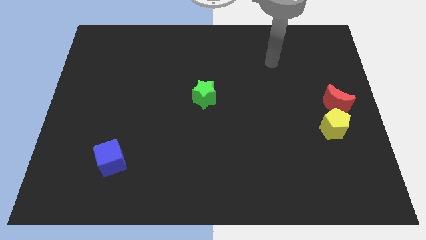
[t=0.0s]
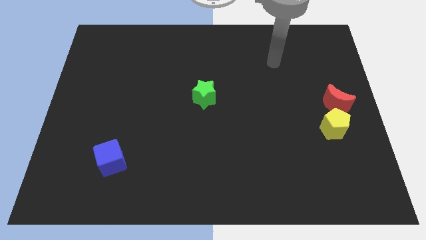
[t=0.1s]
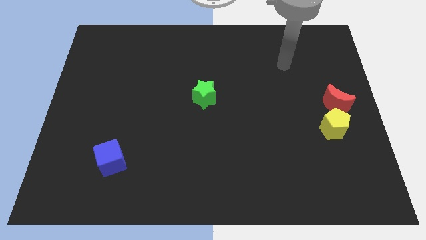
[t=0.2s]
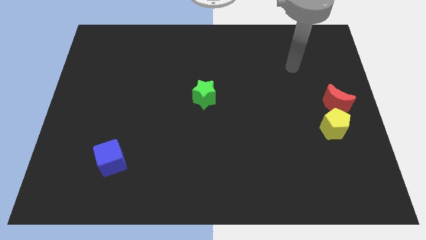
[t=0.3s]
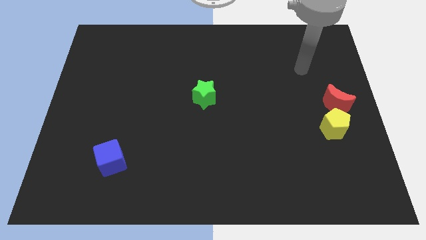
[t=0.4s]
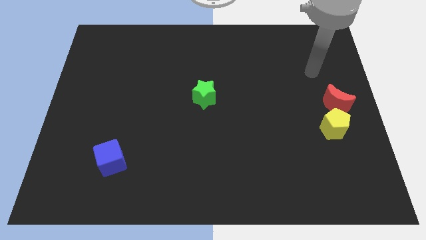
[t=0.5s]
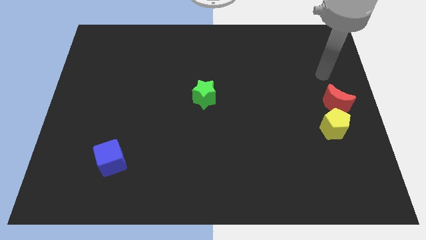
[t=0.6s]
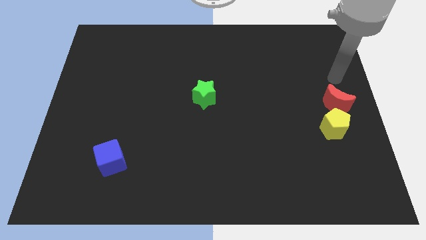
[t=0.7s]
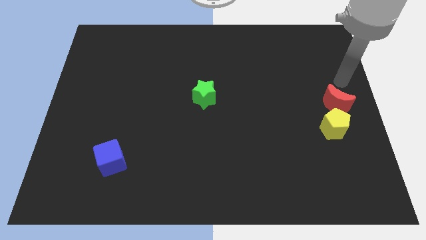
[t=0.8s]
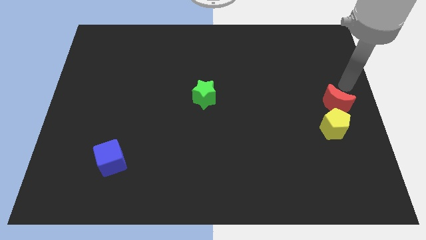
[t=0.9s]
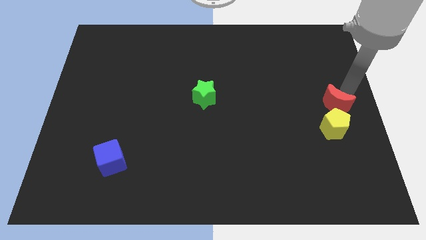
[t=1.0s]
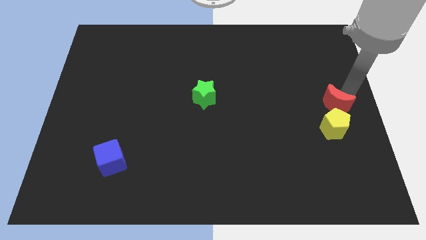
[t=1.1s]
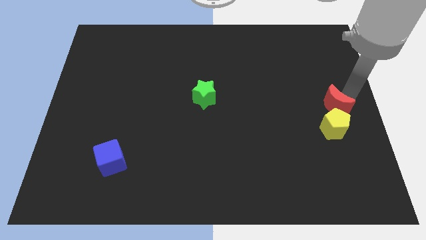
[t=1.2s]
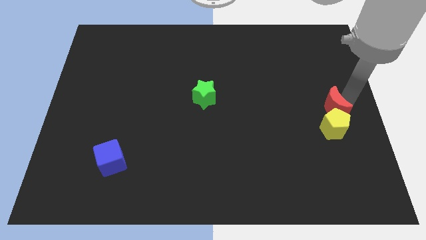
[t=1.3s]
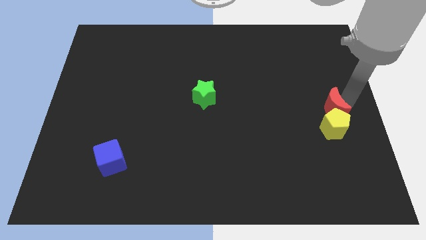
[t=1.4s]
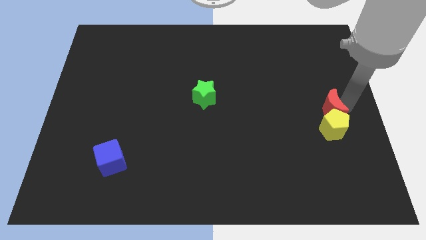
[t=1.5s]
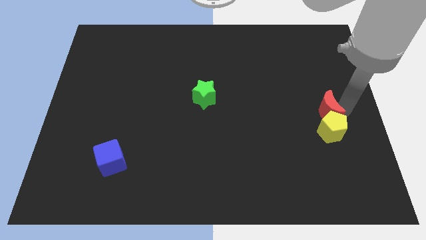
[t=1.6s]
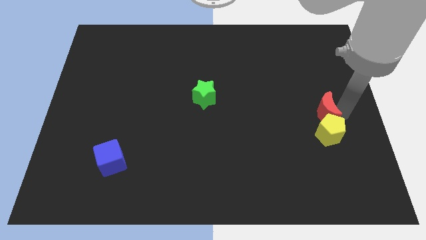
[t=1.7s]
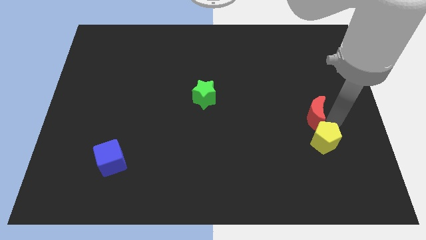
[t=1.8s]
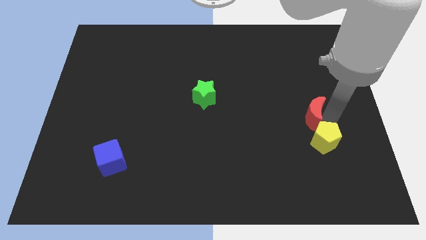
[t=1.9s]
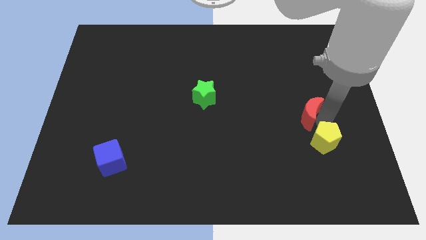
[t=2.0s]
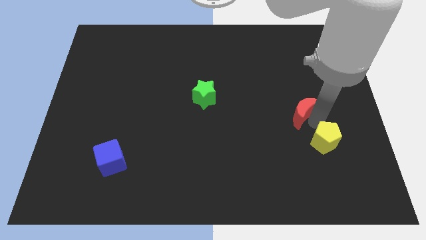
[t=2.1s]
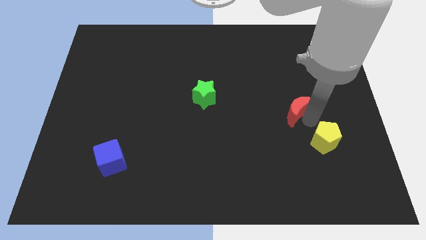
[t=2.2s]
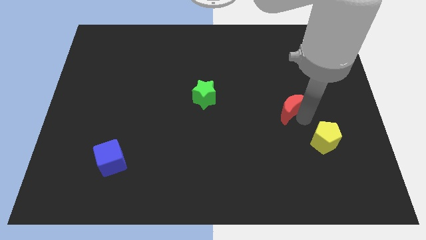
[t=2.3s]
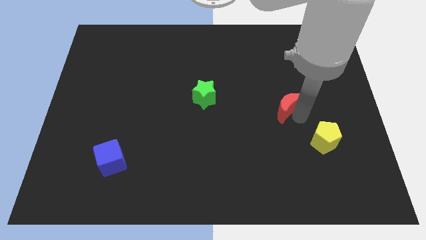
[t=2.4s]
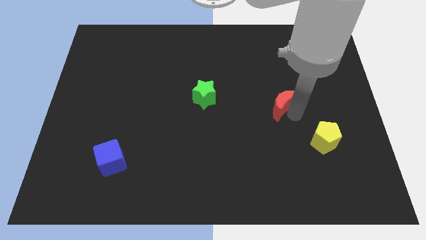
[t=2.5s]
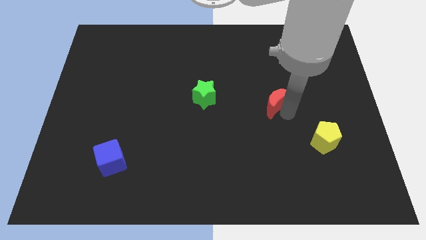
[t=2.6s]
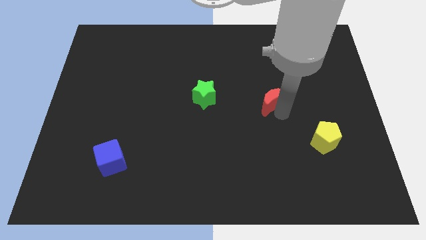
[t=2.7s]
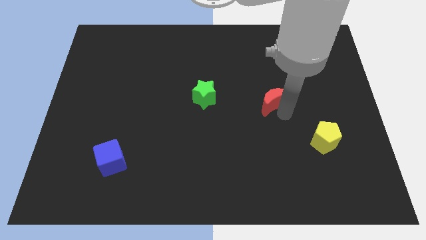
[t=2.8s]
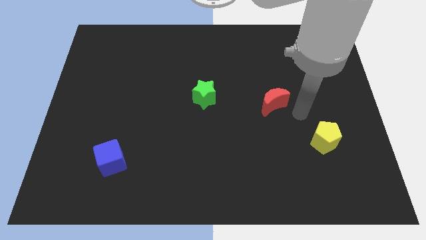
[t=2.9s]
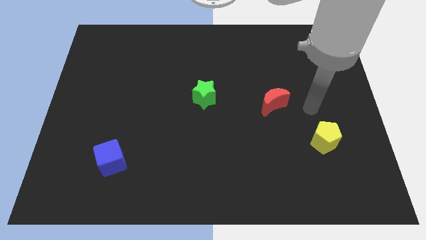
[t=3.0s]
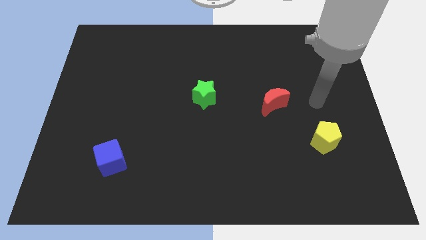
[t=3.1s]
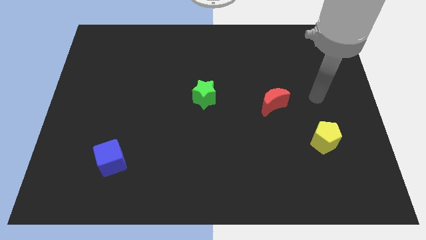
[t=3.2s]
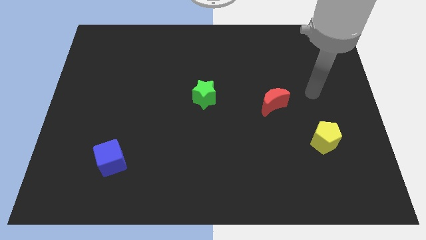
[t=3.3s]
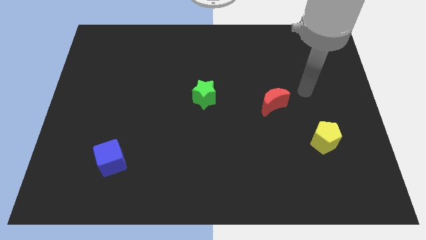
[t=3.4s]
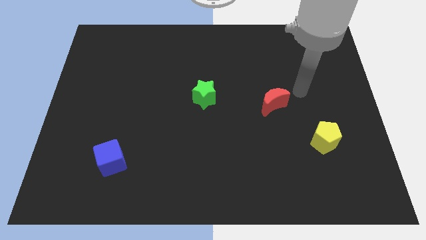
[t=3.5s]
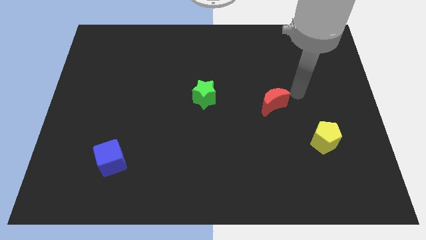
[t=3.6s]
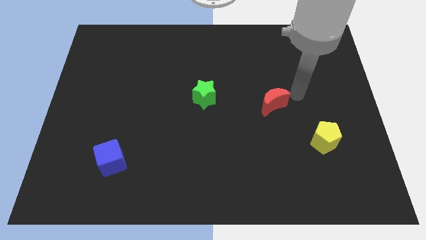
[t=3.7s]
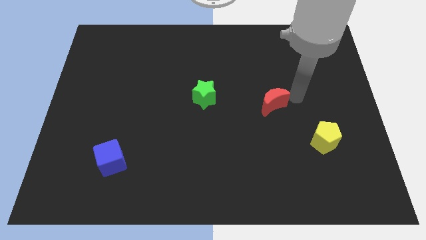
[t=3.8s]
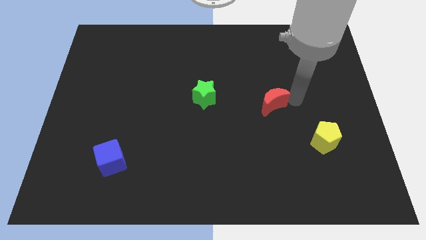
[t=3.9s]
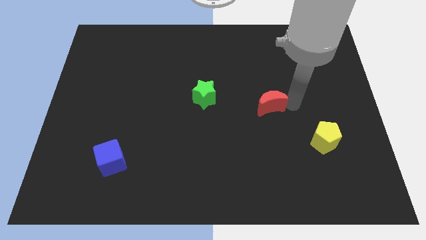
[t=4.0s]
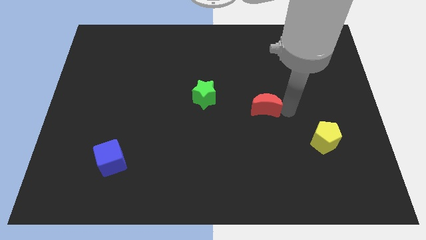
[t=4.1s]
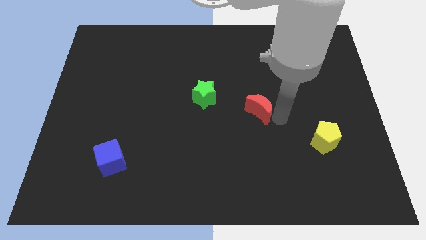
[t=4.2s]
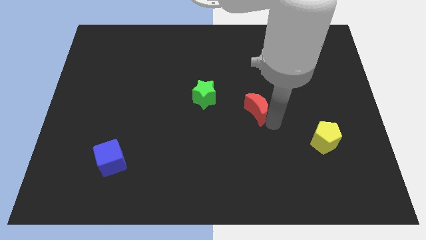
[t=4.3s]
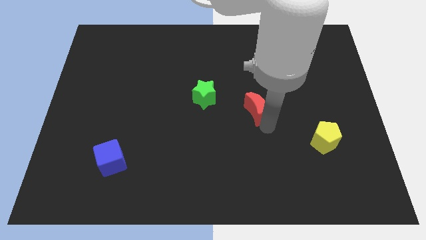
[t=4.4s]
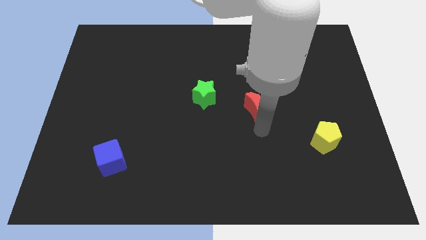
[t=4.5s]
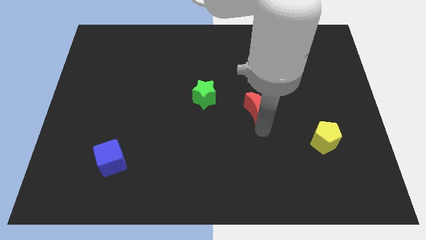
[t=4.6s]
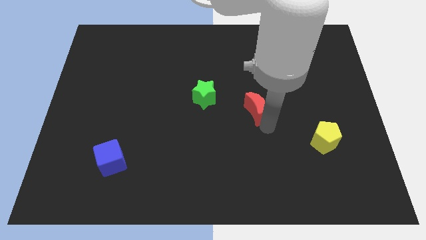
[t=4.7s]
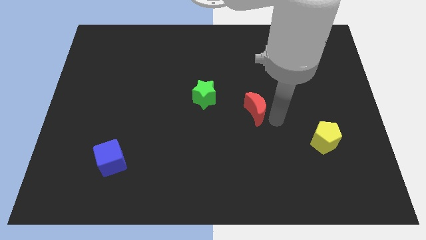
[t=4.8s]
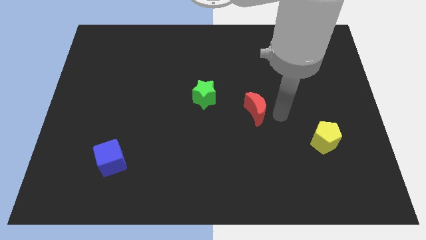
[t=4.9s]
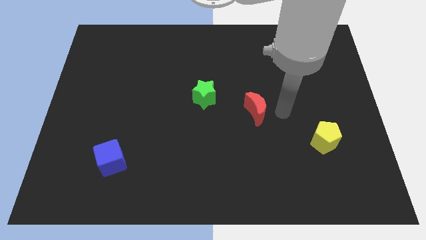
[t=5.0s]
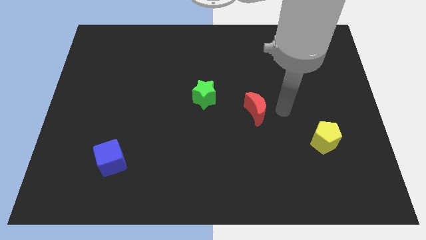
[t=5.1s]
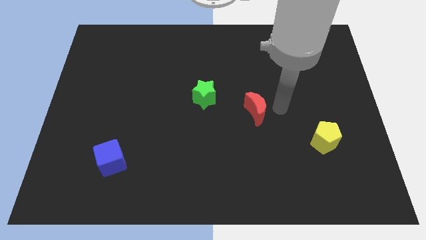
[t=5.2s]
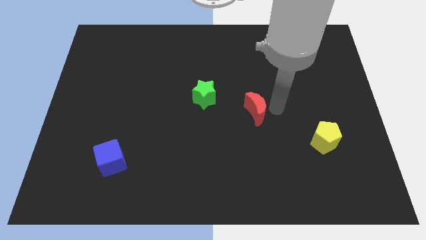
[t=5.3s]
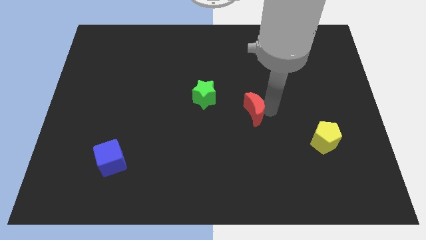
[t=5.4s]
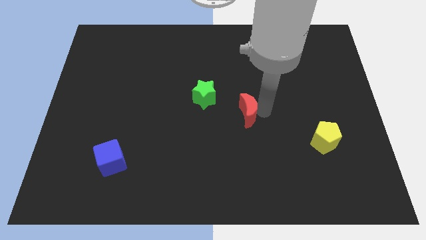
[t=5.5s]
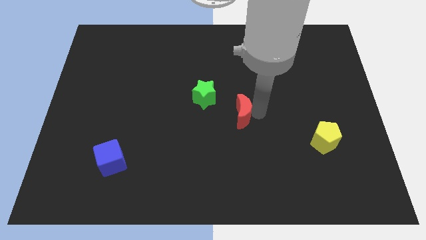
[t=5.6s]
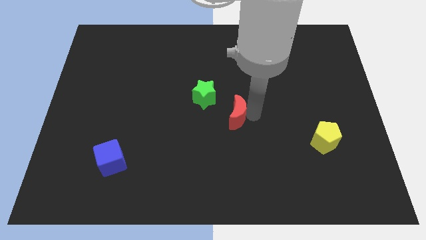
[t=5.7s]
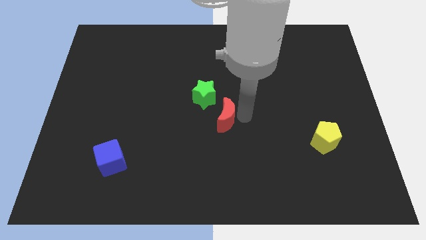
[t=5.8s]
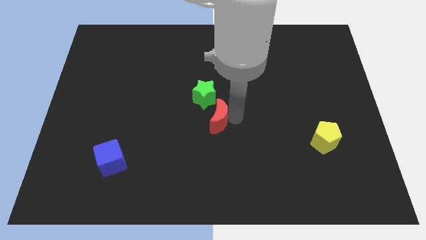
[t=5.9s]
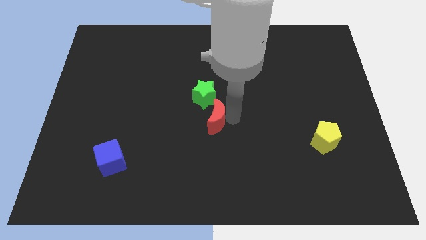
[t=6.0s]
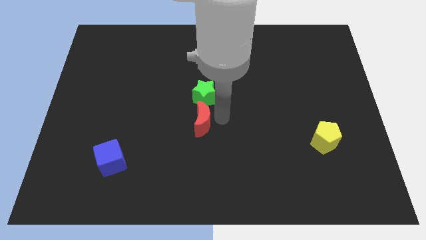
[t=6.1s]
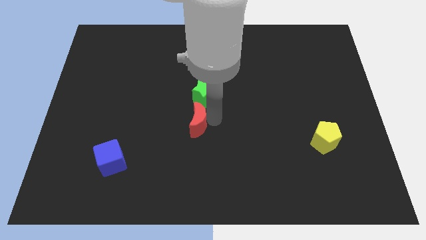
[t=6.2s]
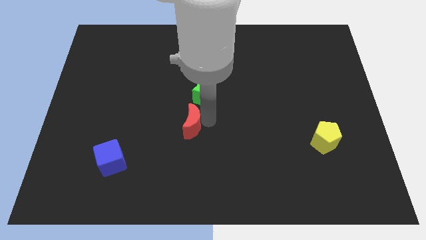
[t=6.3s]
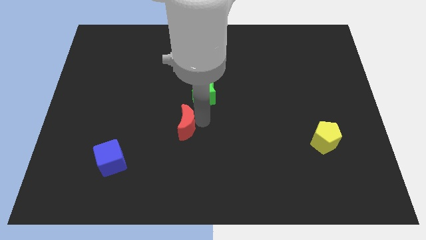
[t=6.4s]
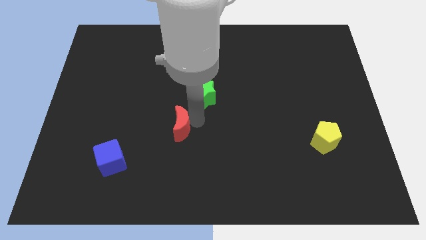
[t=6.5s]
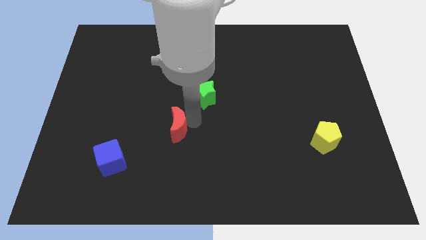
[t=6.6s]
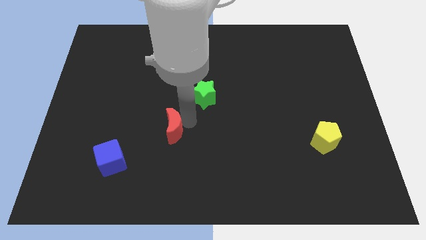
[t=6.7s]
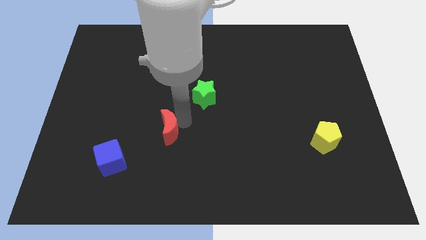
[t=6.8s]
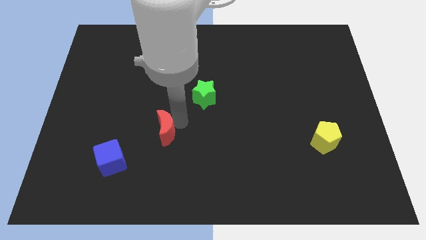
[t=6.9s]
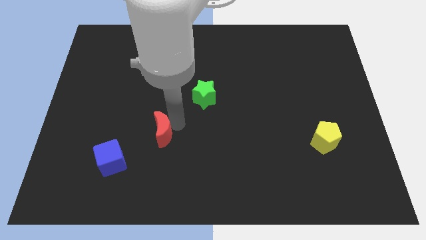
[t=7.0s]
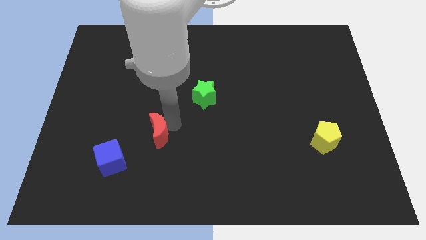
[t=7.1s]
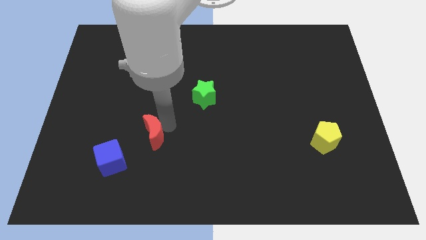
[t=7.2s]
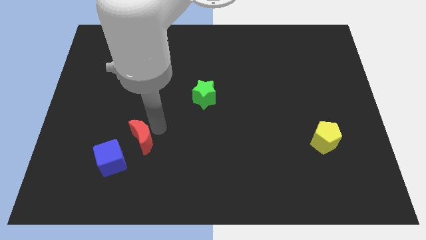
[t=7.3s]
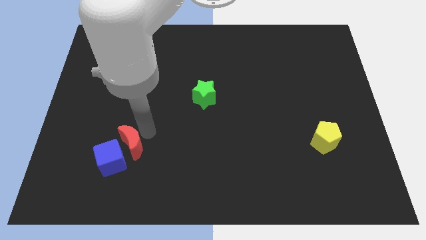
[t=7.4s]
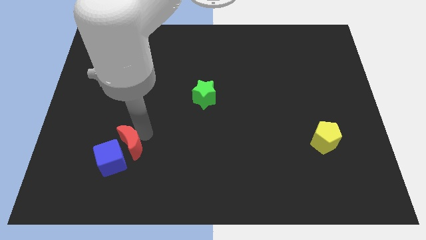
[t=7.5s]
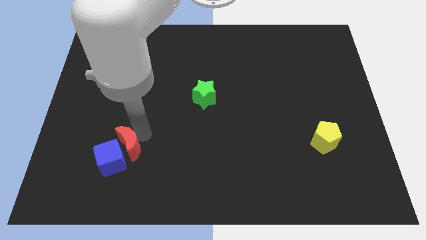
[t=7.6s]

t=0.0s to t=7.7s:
move the red block towards the cube

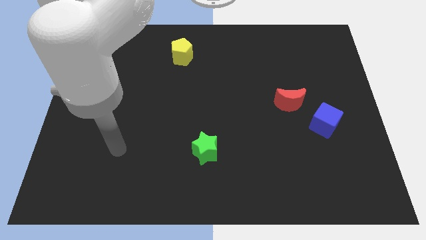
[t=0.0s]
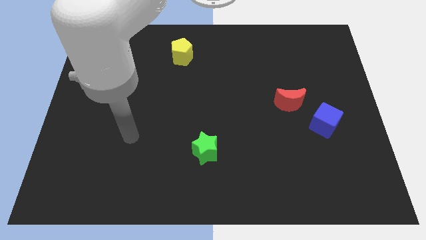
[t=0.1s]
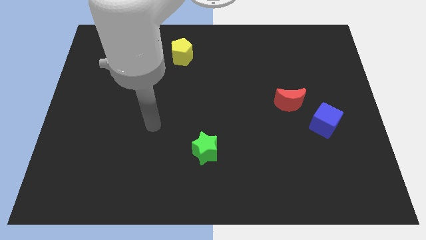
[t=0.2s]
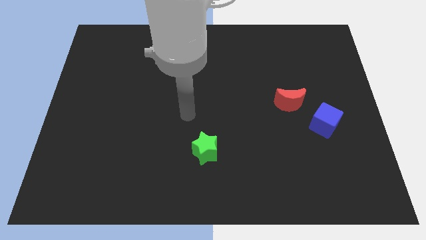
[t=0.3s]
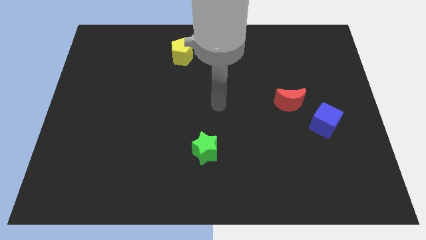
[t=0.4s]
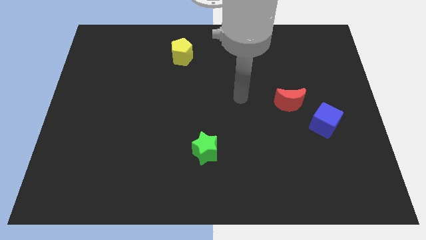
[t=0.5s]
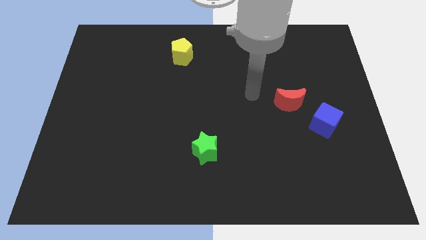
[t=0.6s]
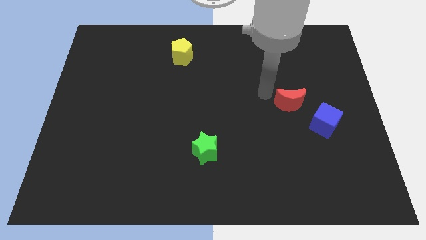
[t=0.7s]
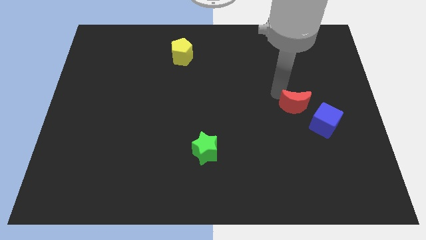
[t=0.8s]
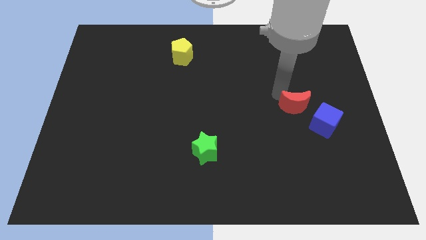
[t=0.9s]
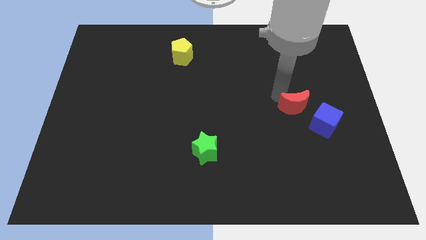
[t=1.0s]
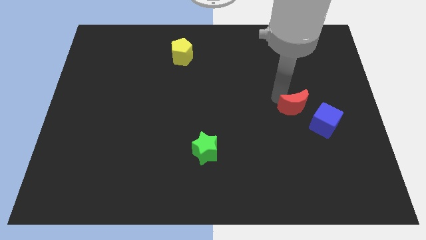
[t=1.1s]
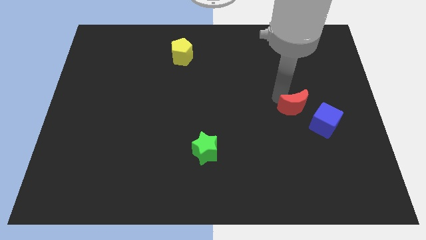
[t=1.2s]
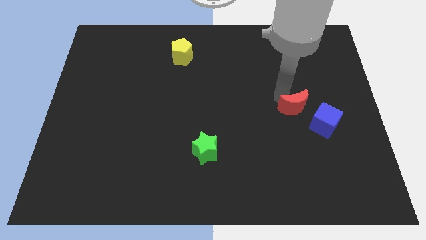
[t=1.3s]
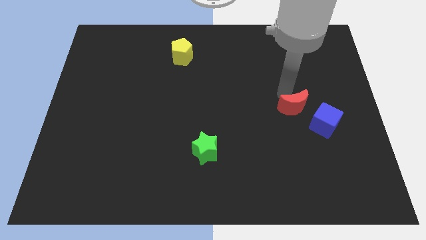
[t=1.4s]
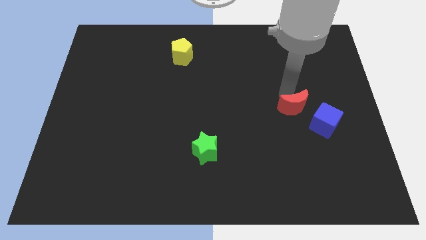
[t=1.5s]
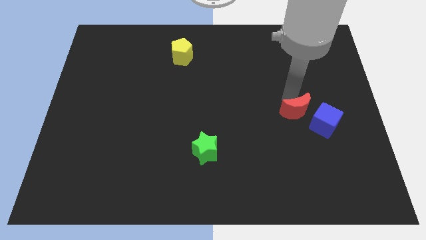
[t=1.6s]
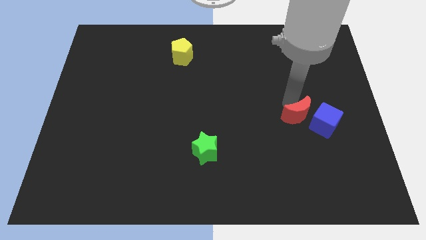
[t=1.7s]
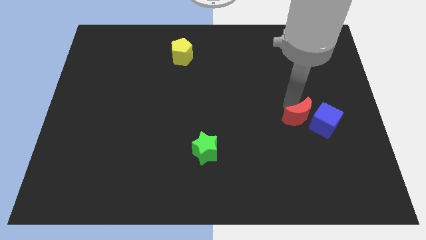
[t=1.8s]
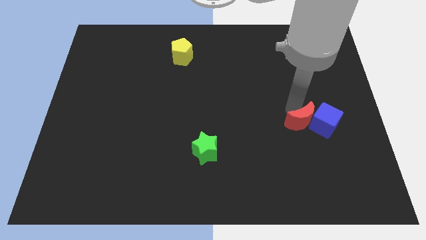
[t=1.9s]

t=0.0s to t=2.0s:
move the red block next to the blue cube
